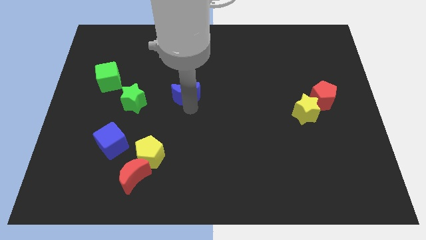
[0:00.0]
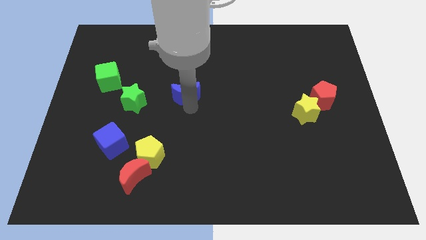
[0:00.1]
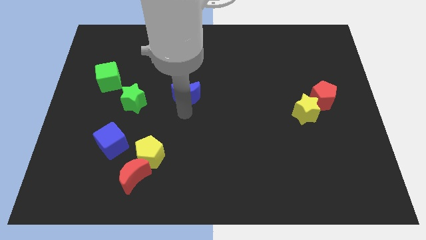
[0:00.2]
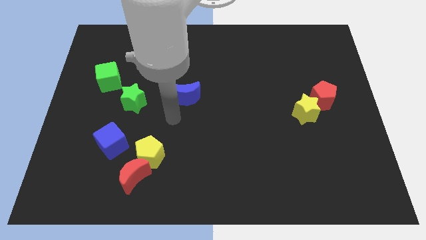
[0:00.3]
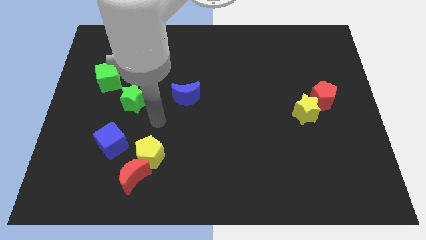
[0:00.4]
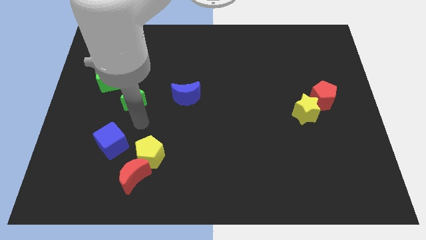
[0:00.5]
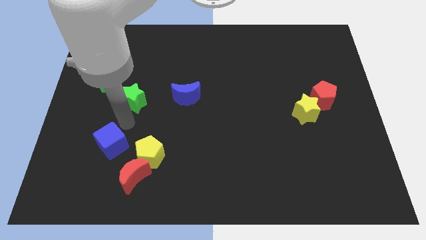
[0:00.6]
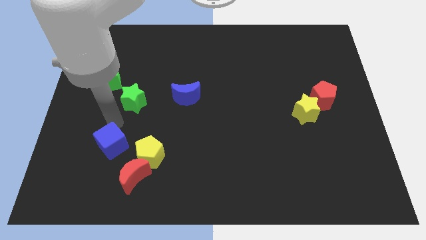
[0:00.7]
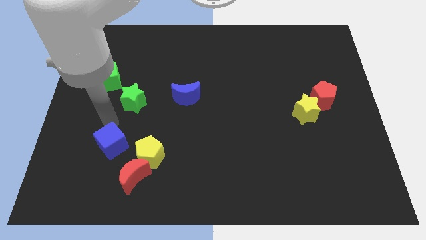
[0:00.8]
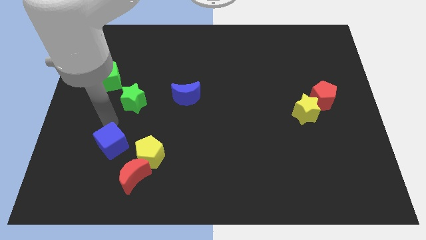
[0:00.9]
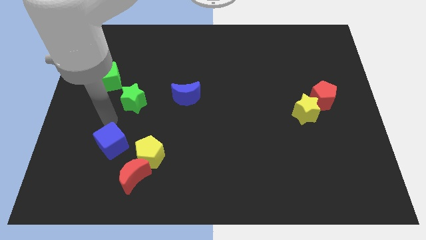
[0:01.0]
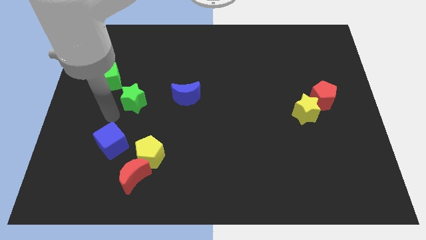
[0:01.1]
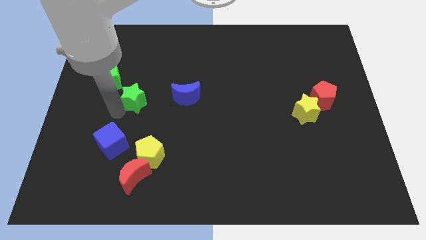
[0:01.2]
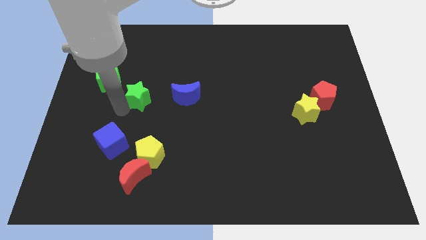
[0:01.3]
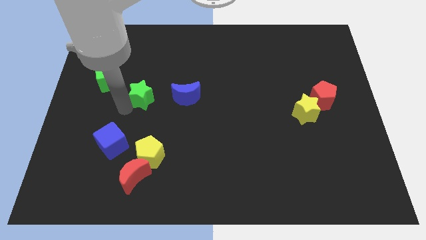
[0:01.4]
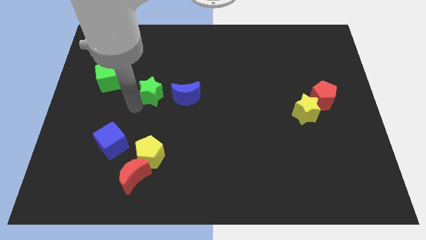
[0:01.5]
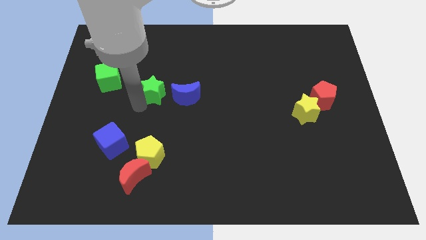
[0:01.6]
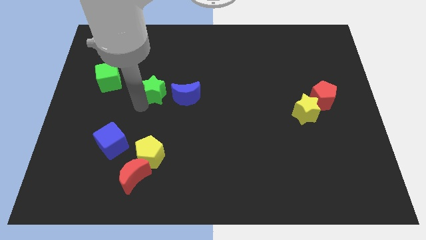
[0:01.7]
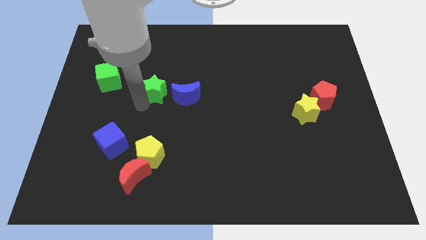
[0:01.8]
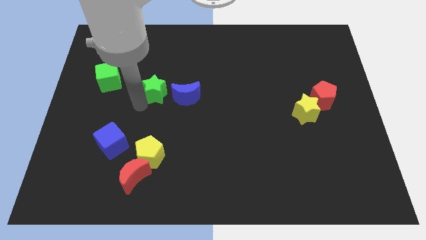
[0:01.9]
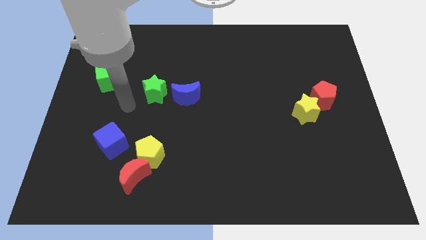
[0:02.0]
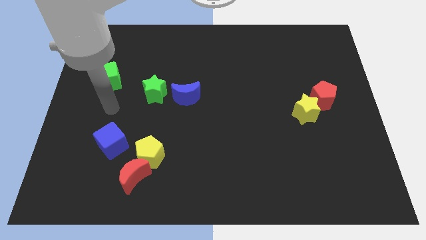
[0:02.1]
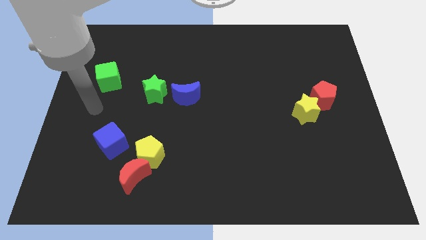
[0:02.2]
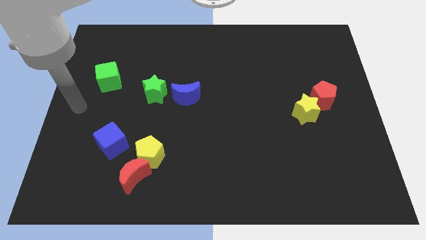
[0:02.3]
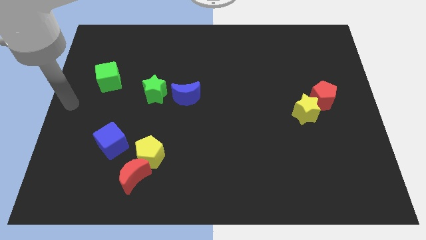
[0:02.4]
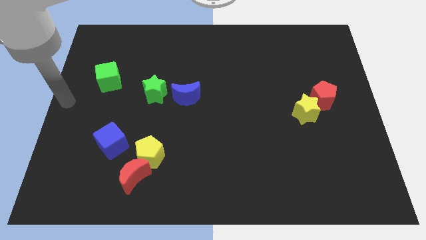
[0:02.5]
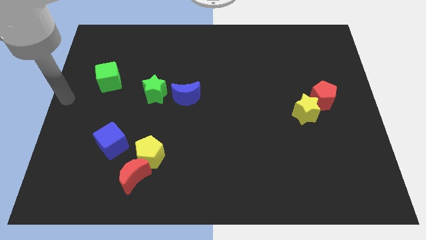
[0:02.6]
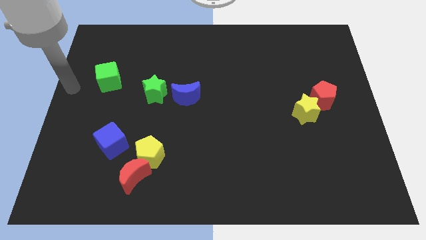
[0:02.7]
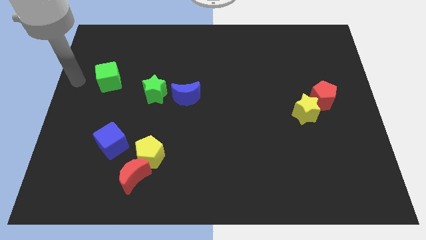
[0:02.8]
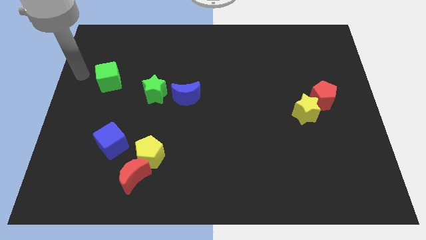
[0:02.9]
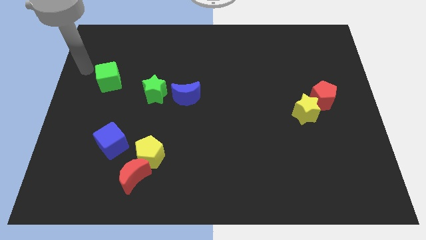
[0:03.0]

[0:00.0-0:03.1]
slide the green star to the left of the blue crescent

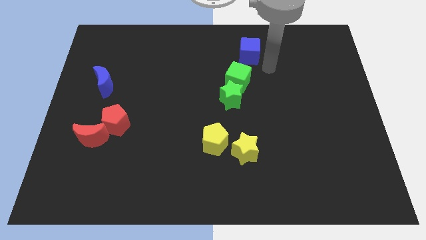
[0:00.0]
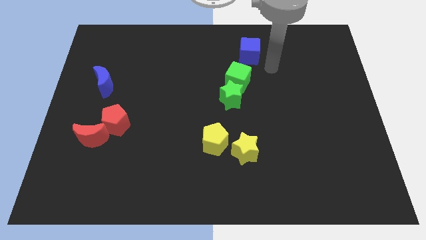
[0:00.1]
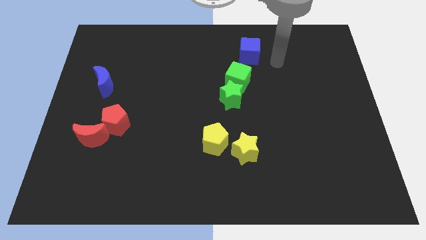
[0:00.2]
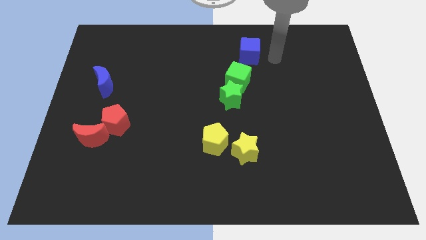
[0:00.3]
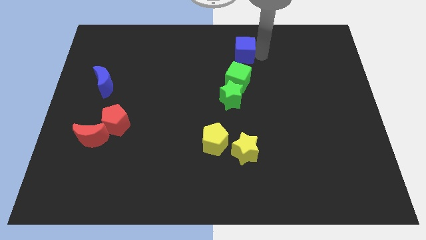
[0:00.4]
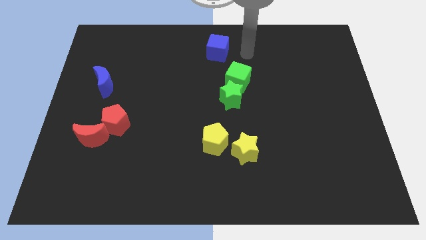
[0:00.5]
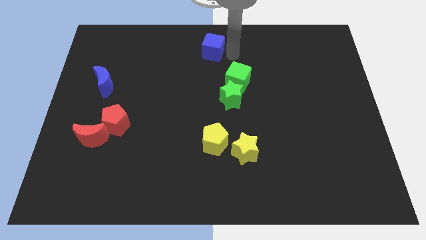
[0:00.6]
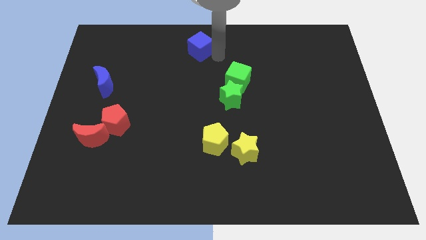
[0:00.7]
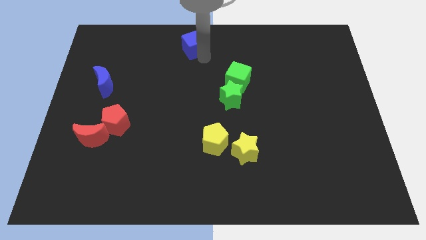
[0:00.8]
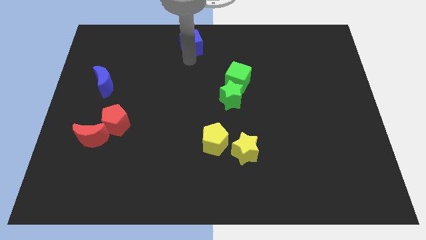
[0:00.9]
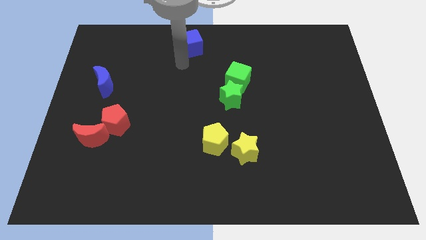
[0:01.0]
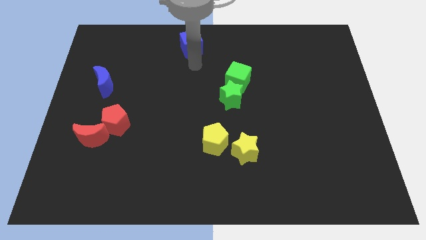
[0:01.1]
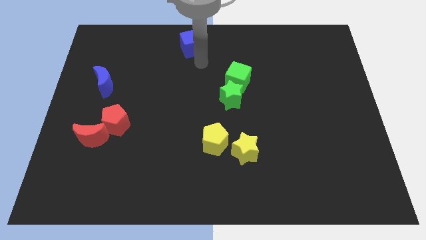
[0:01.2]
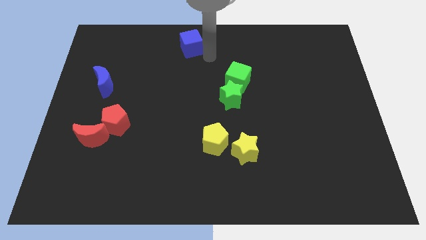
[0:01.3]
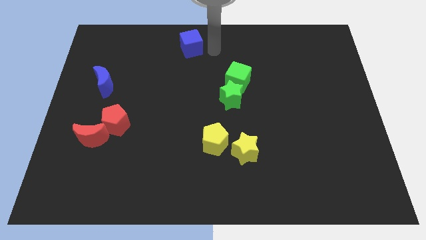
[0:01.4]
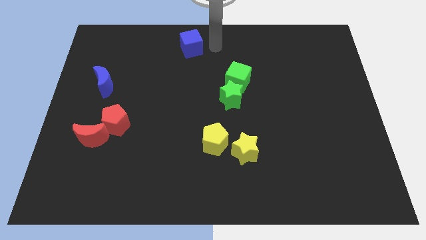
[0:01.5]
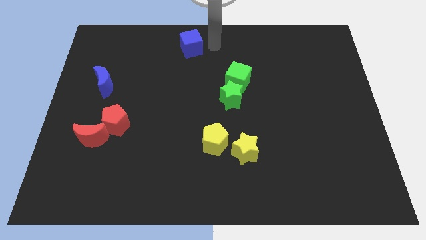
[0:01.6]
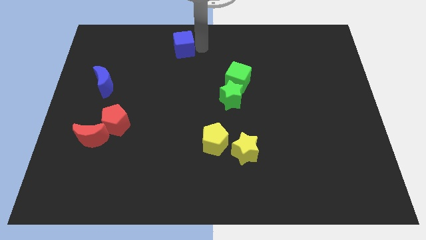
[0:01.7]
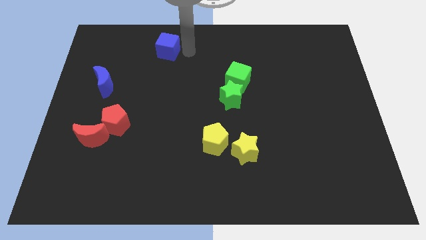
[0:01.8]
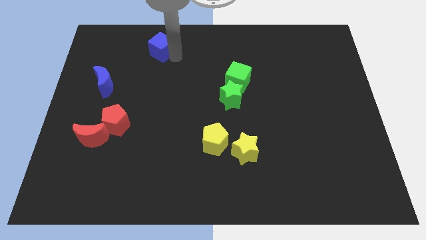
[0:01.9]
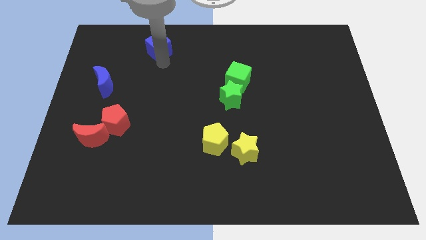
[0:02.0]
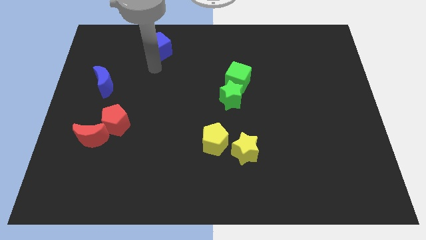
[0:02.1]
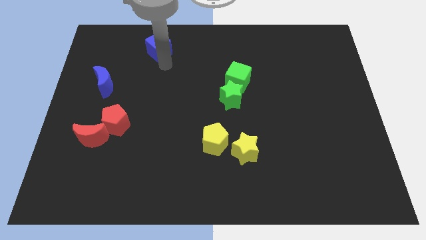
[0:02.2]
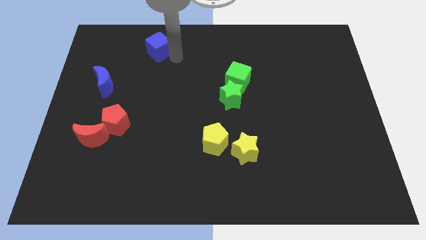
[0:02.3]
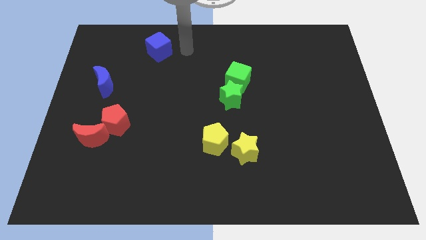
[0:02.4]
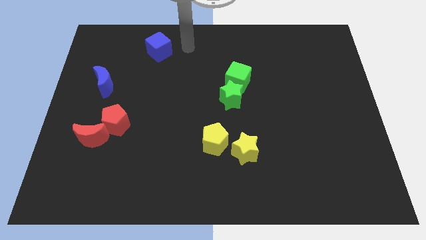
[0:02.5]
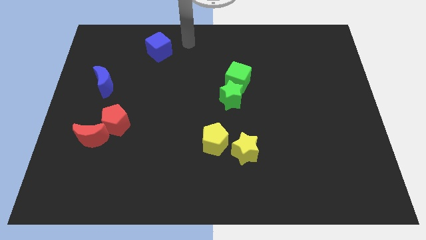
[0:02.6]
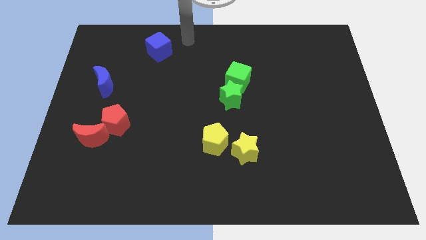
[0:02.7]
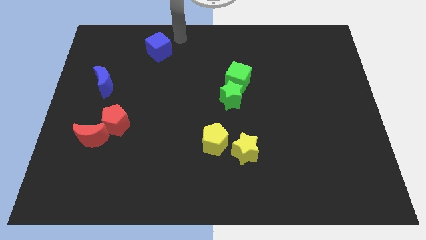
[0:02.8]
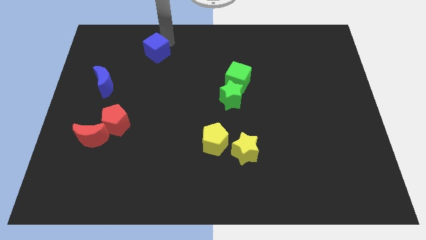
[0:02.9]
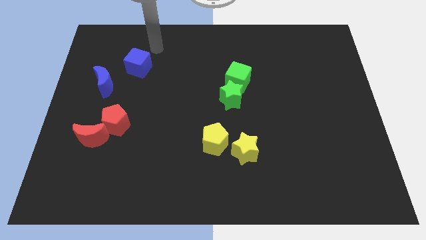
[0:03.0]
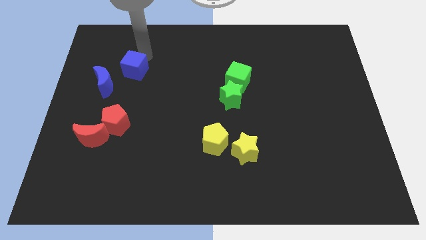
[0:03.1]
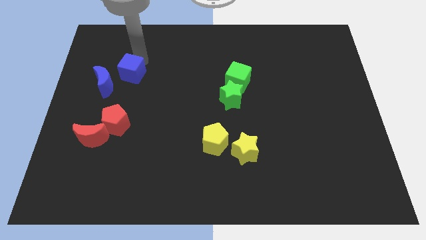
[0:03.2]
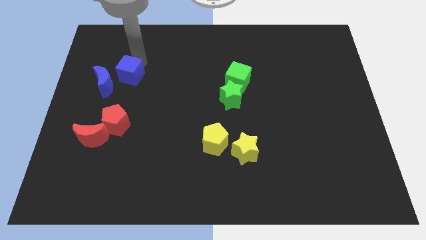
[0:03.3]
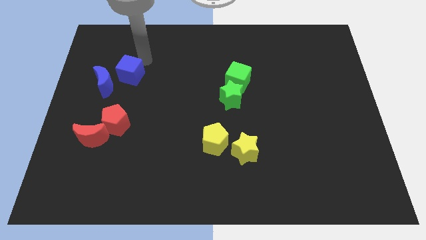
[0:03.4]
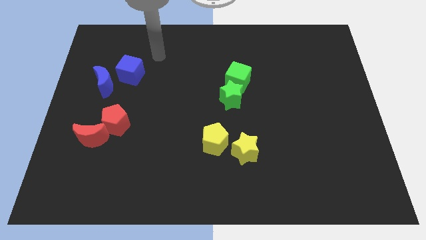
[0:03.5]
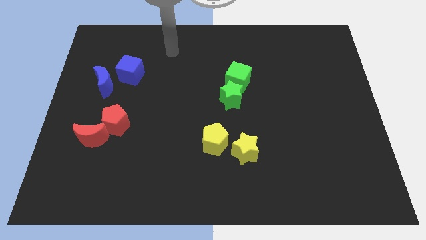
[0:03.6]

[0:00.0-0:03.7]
put the blue cube vertically above the red pentagon

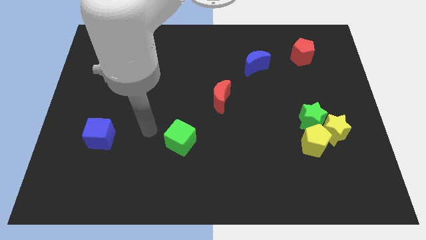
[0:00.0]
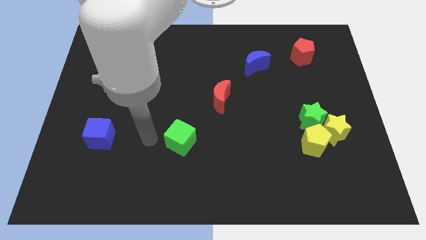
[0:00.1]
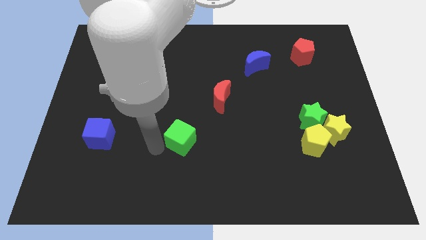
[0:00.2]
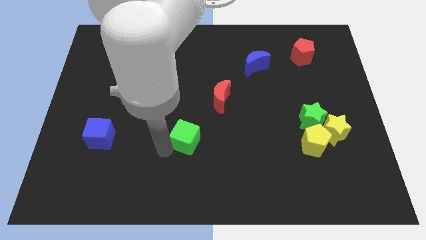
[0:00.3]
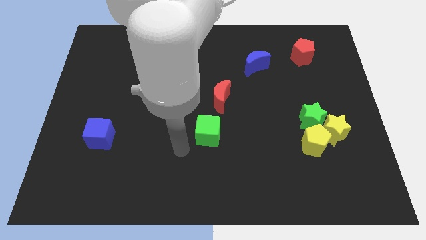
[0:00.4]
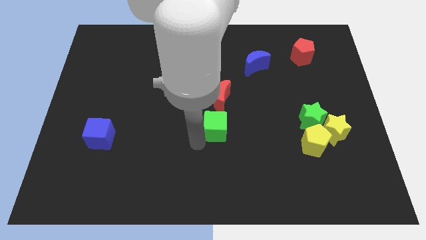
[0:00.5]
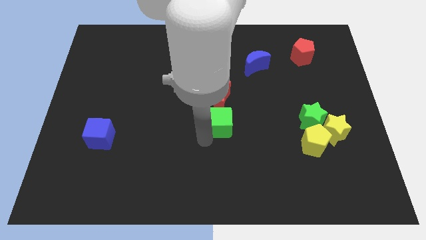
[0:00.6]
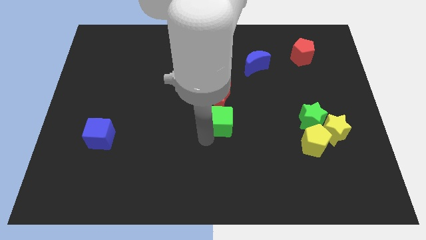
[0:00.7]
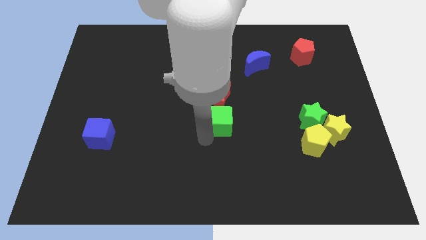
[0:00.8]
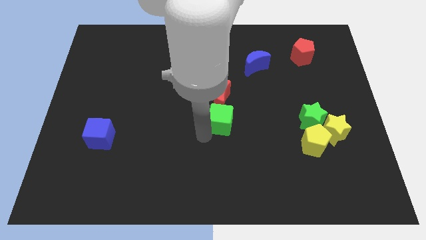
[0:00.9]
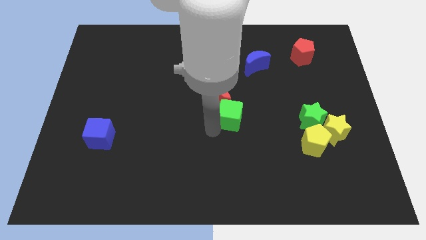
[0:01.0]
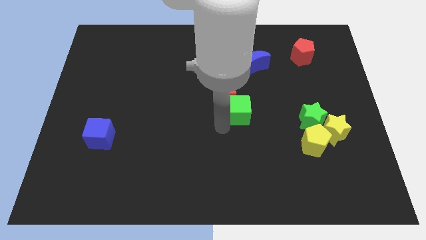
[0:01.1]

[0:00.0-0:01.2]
drag the green cube into the bottom side of the red crescent

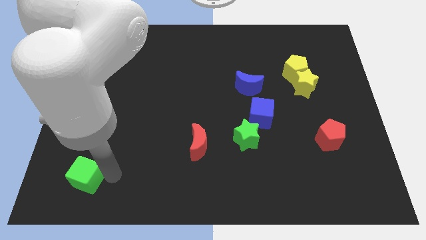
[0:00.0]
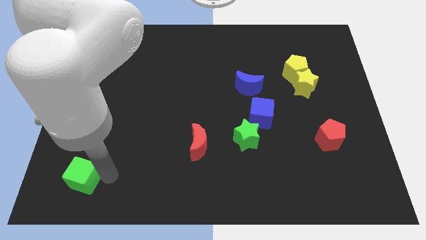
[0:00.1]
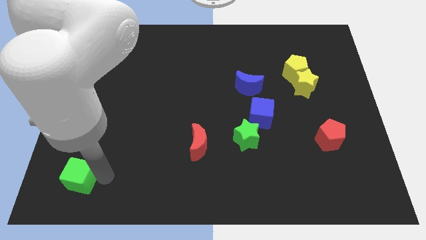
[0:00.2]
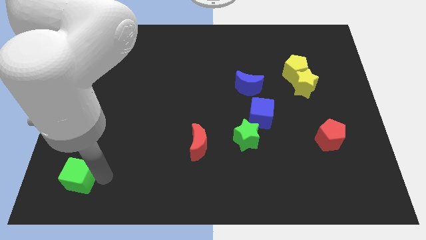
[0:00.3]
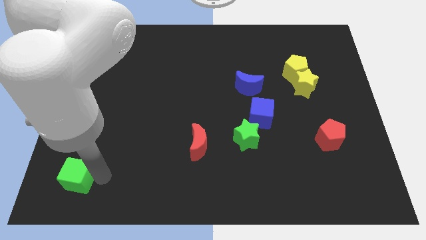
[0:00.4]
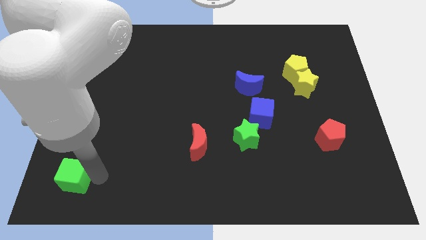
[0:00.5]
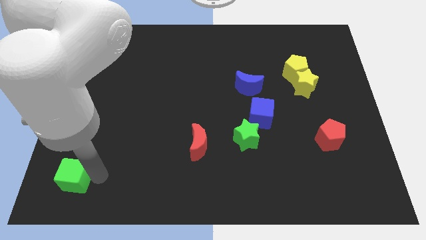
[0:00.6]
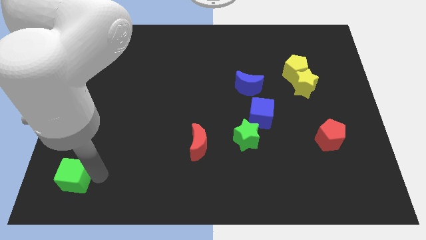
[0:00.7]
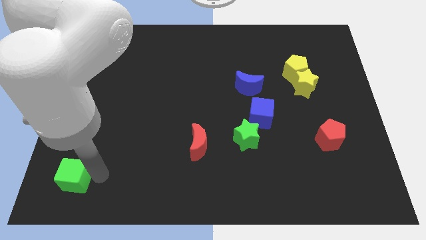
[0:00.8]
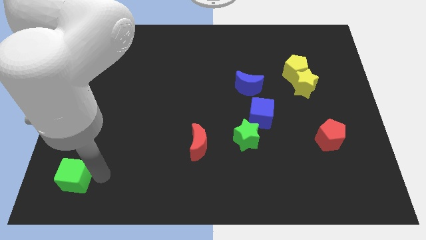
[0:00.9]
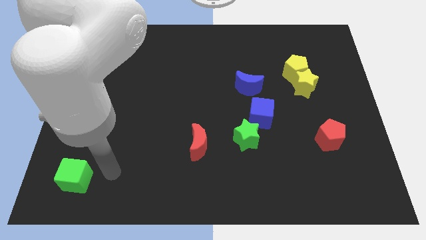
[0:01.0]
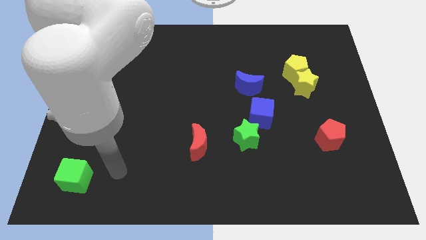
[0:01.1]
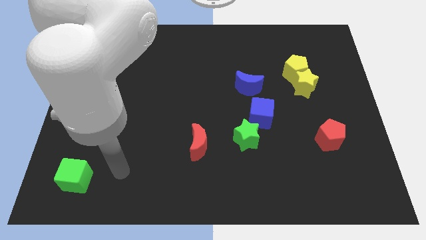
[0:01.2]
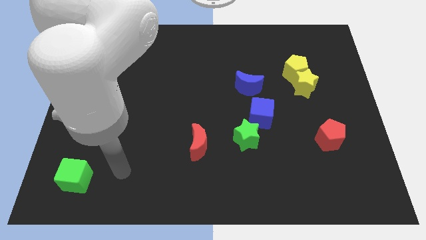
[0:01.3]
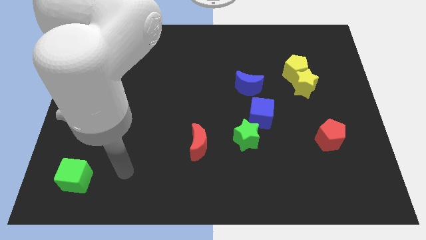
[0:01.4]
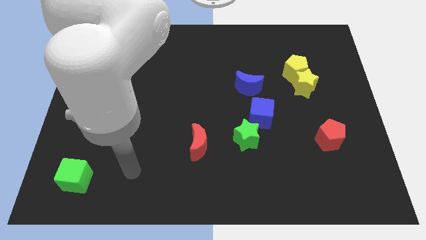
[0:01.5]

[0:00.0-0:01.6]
push the green cube towards the bottom left of the board
